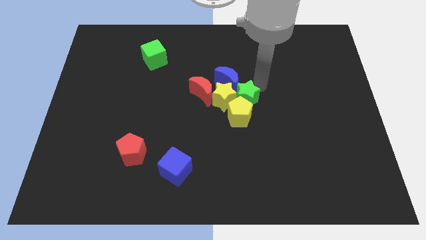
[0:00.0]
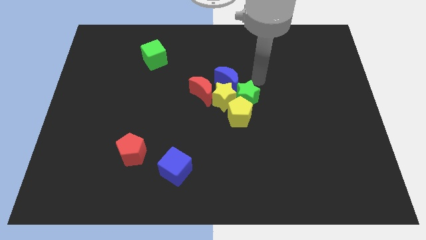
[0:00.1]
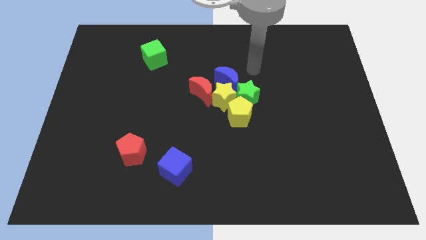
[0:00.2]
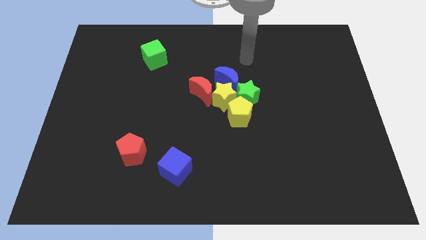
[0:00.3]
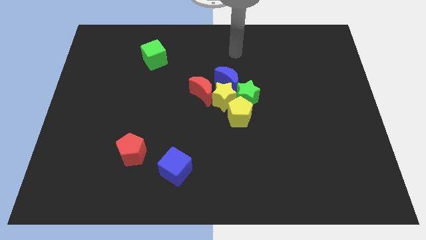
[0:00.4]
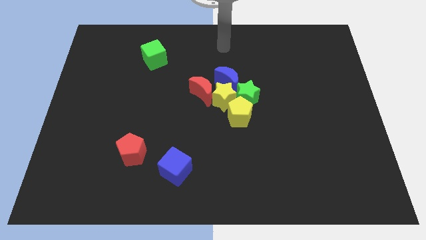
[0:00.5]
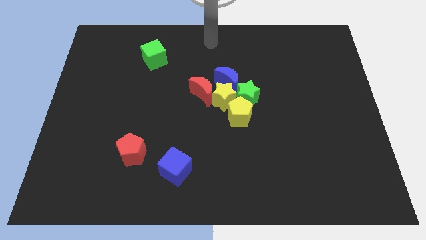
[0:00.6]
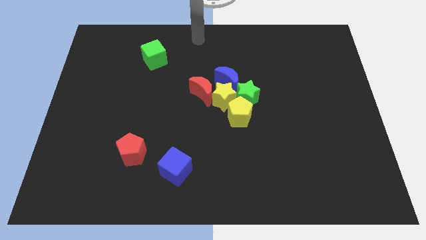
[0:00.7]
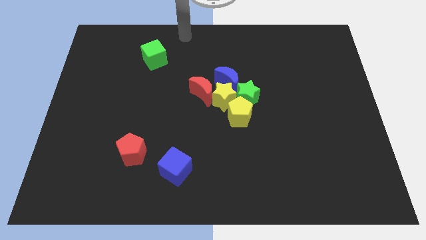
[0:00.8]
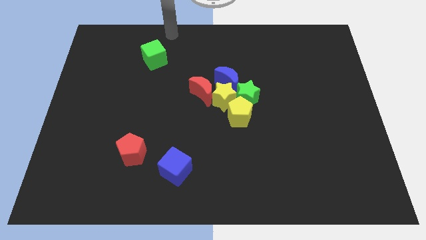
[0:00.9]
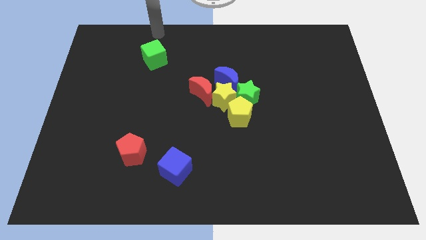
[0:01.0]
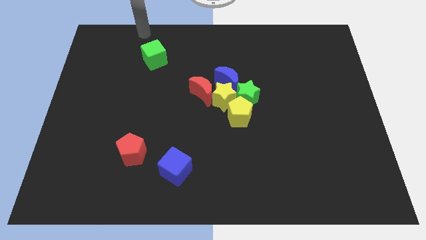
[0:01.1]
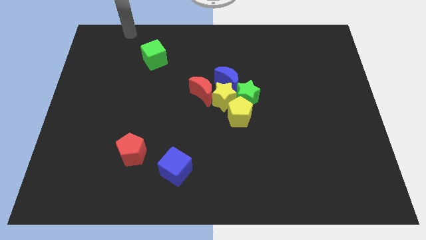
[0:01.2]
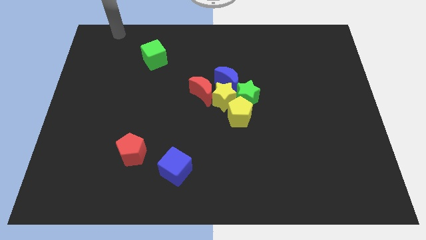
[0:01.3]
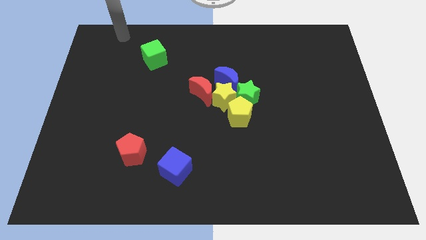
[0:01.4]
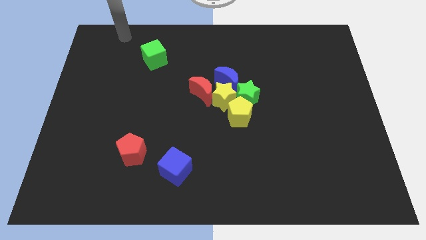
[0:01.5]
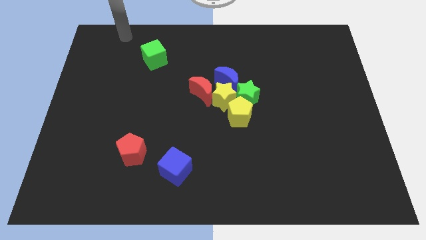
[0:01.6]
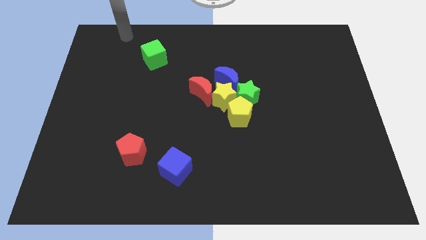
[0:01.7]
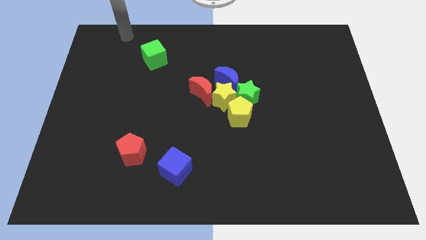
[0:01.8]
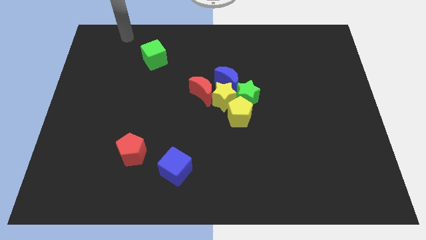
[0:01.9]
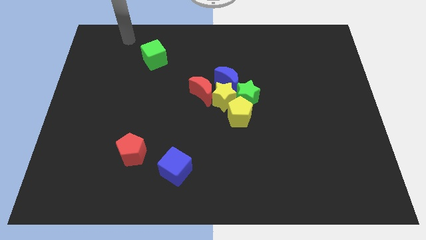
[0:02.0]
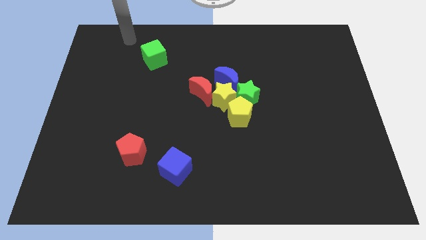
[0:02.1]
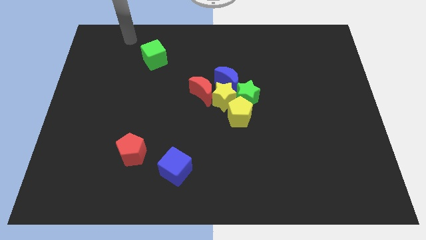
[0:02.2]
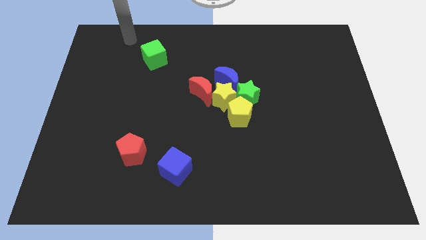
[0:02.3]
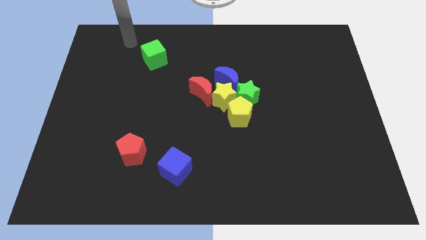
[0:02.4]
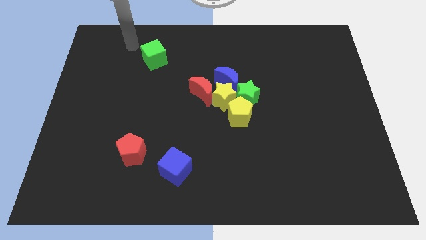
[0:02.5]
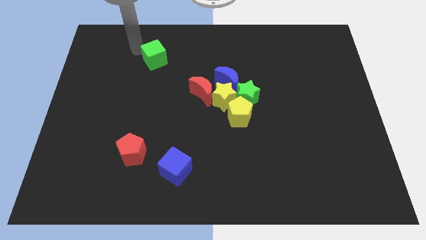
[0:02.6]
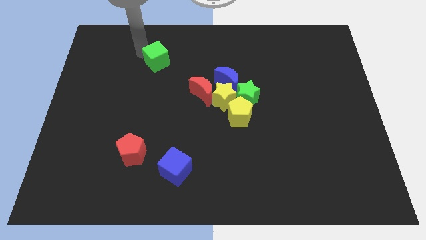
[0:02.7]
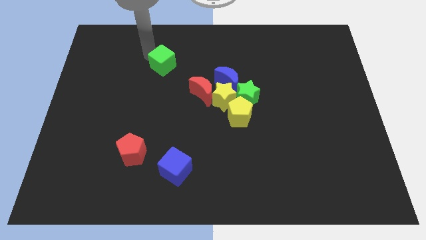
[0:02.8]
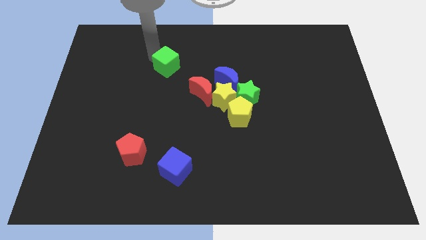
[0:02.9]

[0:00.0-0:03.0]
move your arm to the top of the green cube

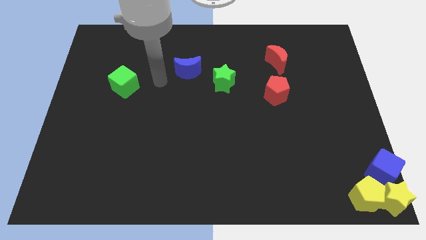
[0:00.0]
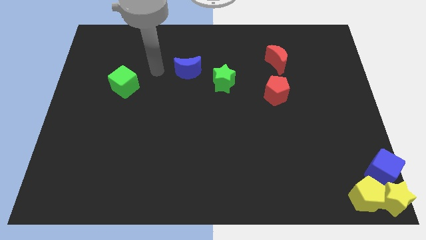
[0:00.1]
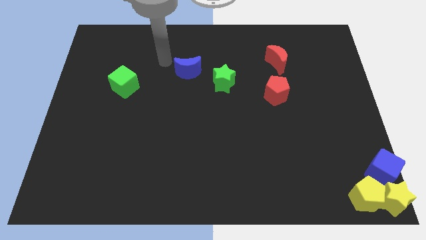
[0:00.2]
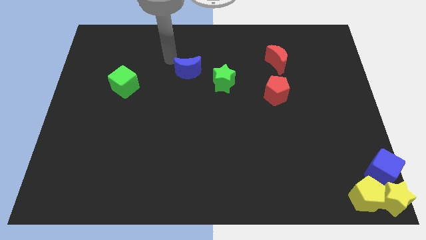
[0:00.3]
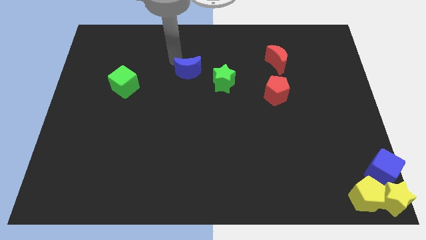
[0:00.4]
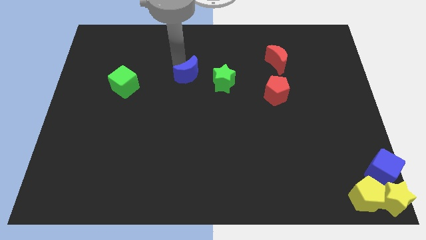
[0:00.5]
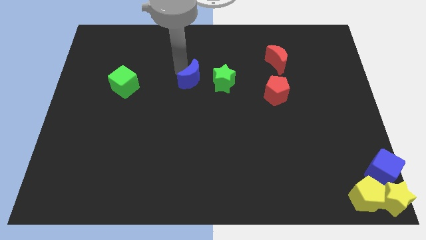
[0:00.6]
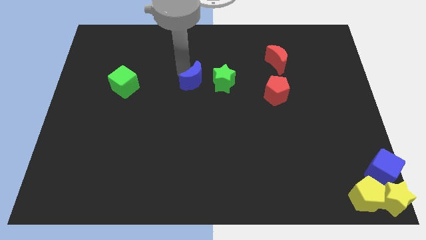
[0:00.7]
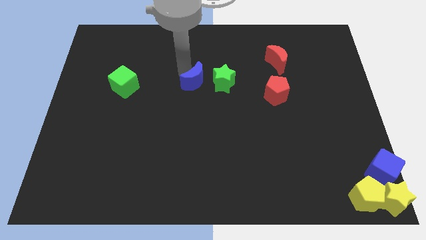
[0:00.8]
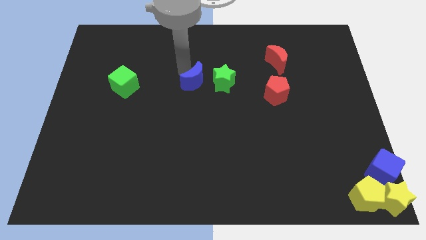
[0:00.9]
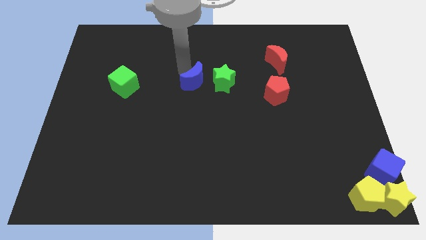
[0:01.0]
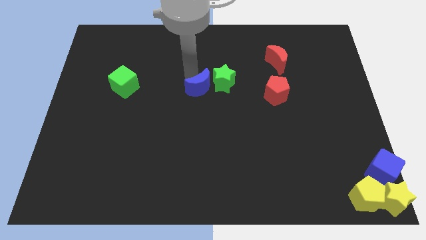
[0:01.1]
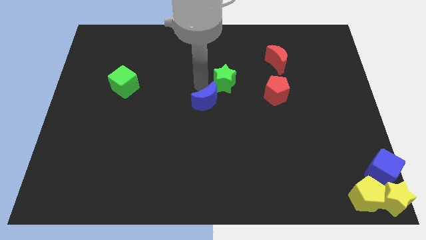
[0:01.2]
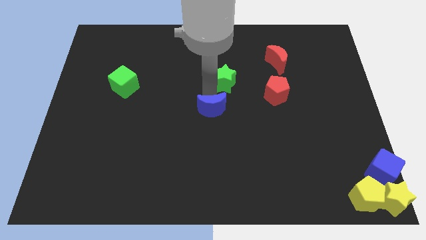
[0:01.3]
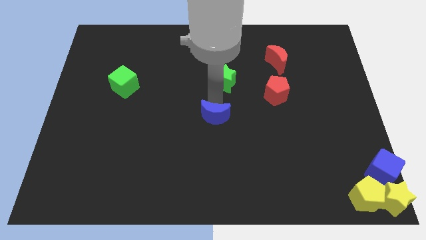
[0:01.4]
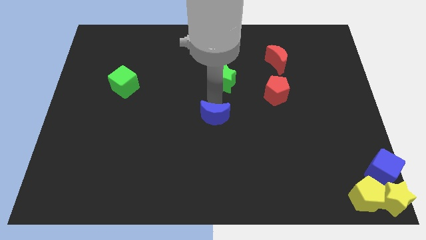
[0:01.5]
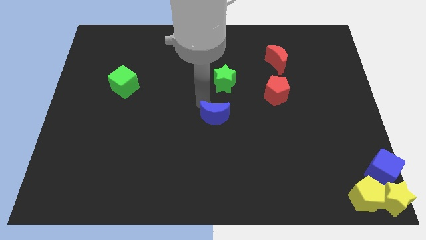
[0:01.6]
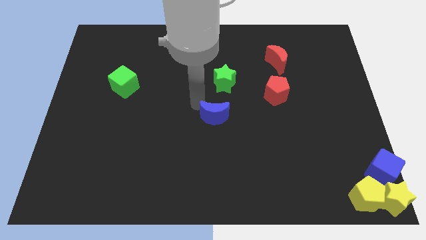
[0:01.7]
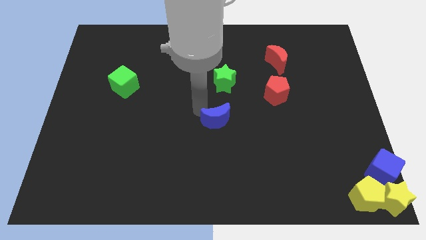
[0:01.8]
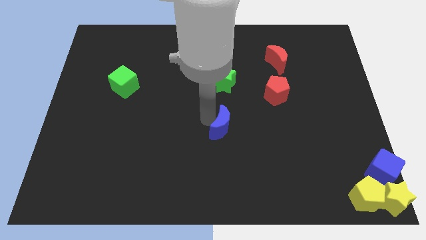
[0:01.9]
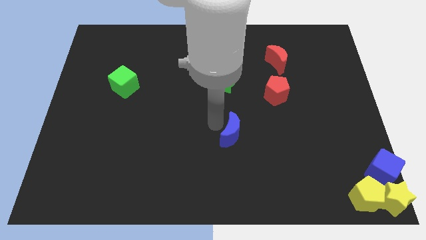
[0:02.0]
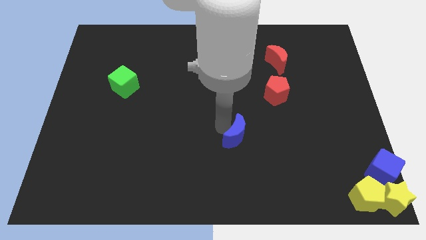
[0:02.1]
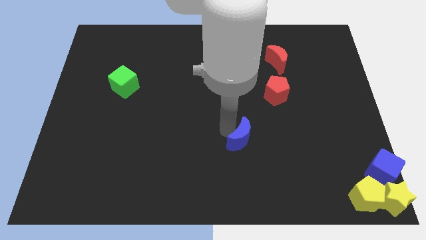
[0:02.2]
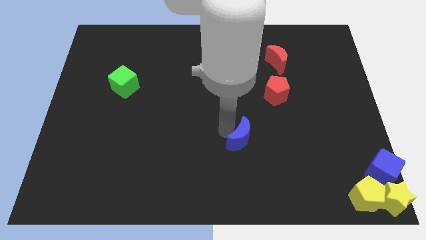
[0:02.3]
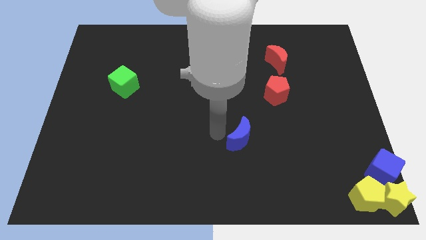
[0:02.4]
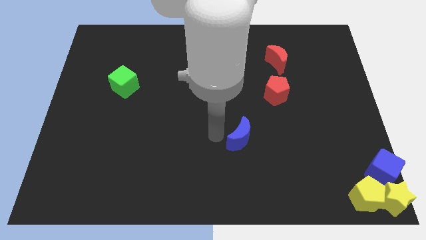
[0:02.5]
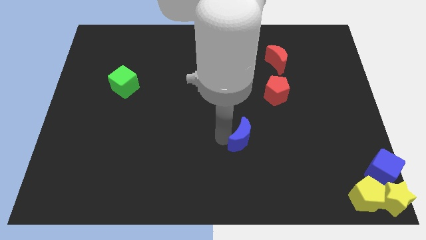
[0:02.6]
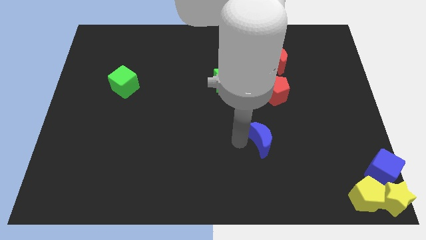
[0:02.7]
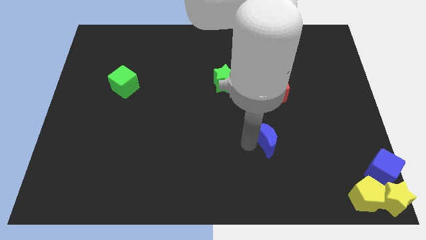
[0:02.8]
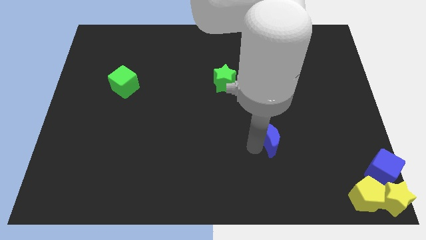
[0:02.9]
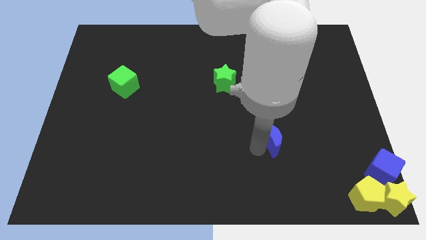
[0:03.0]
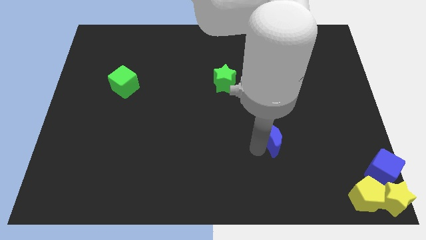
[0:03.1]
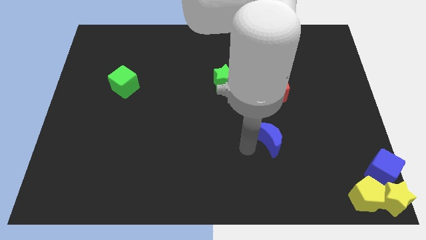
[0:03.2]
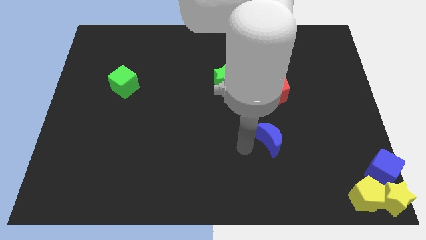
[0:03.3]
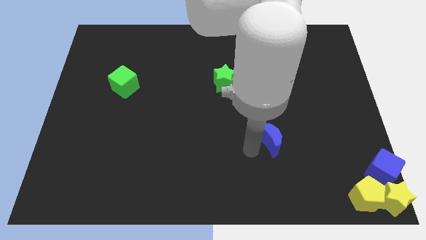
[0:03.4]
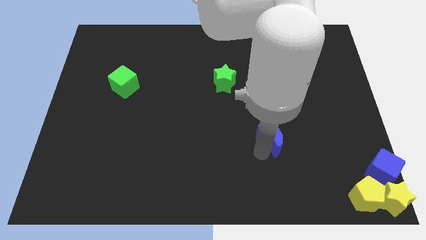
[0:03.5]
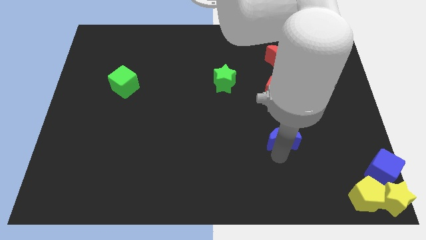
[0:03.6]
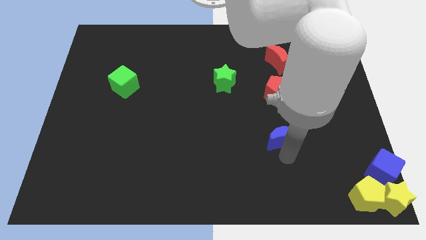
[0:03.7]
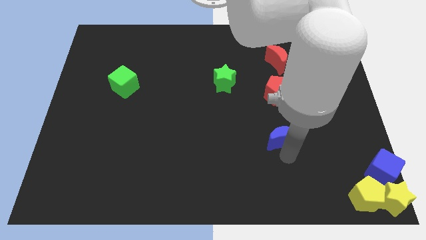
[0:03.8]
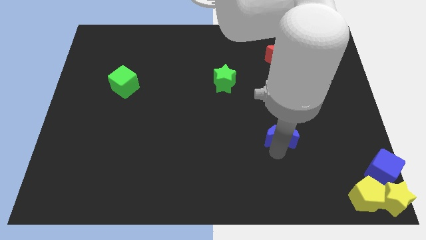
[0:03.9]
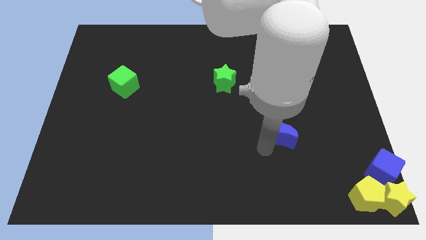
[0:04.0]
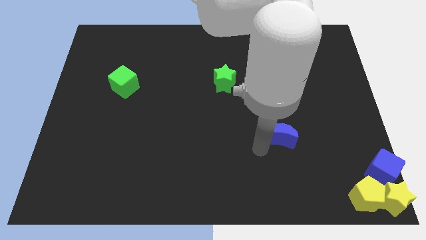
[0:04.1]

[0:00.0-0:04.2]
put the blue moon below the red pentagon

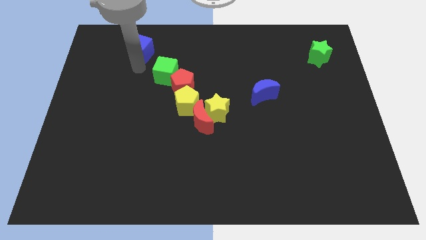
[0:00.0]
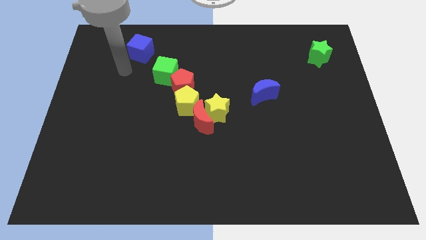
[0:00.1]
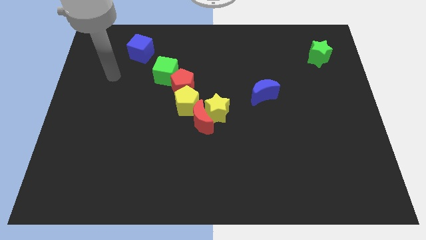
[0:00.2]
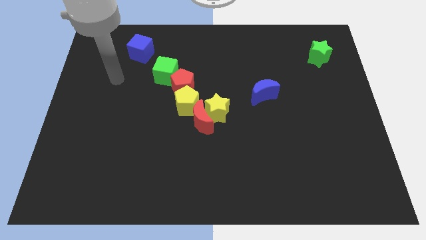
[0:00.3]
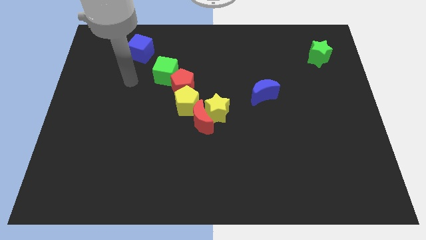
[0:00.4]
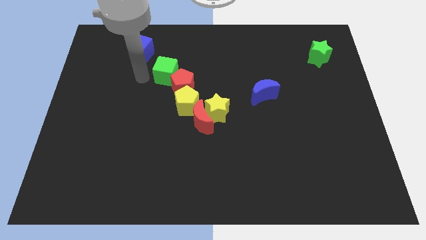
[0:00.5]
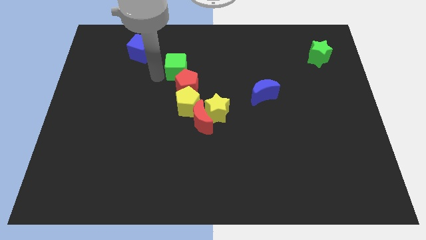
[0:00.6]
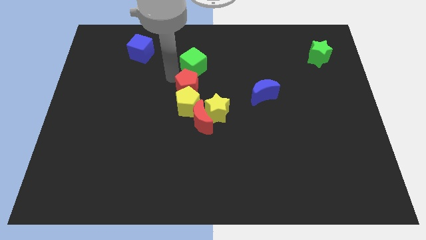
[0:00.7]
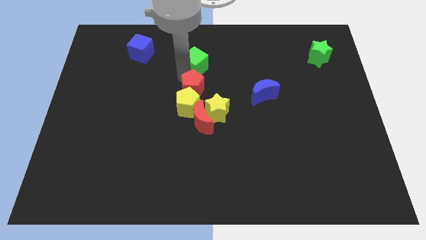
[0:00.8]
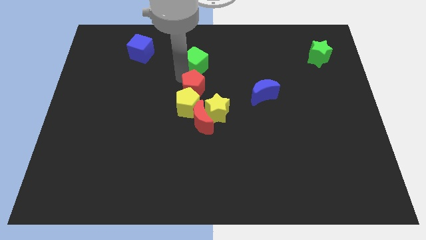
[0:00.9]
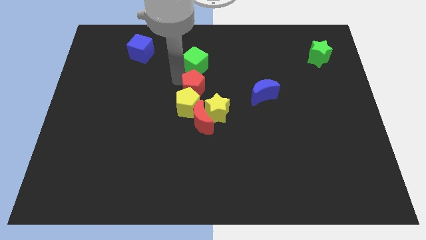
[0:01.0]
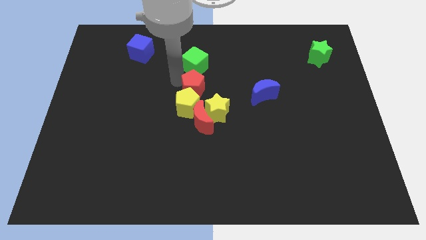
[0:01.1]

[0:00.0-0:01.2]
move the green cube to the top center of the board

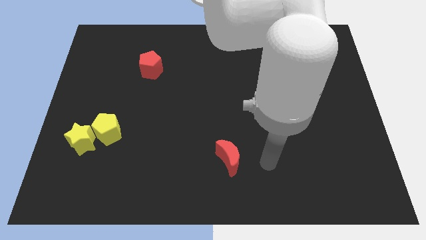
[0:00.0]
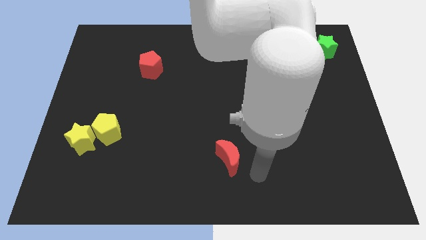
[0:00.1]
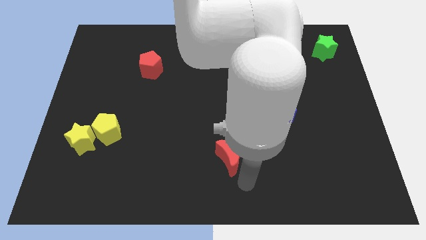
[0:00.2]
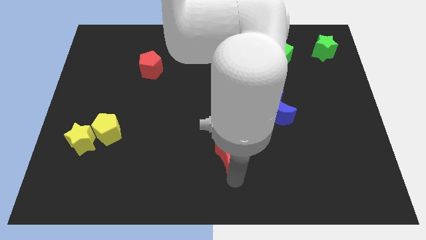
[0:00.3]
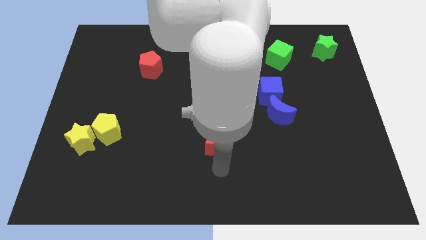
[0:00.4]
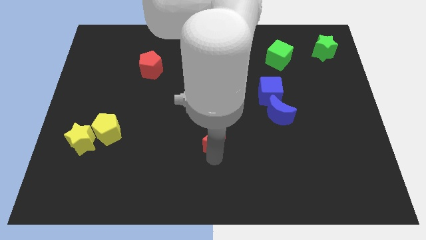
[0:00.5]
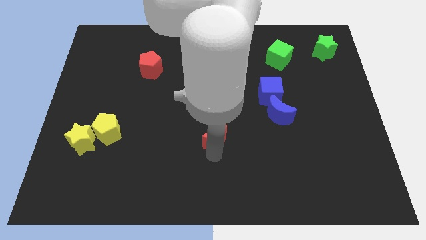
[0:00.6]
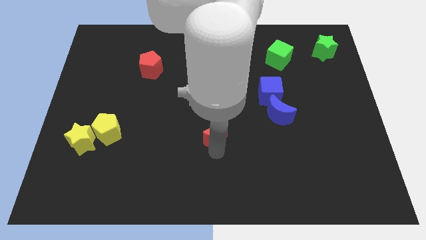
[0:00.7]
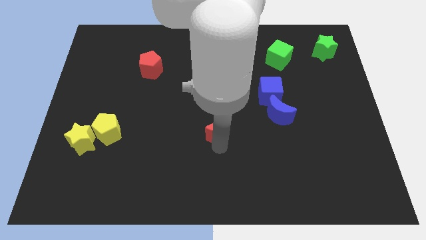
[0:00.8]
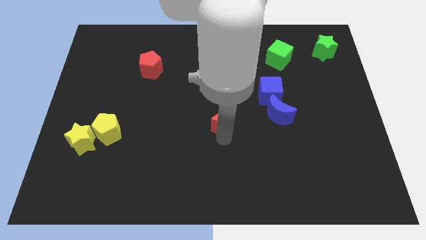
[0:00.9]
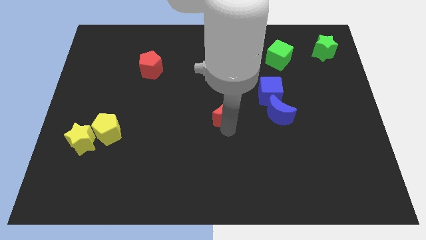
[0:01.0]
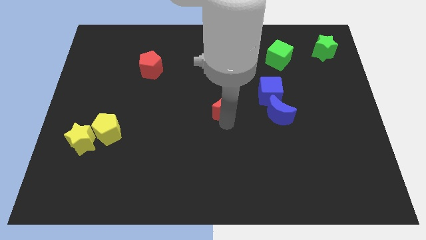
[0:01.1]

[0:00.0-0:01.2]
slide red moon to the center
